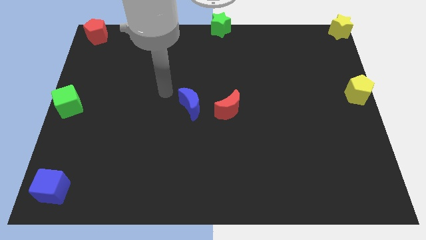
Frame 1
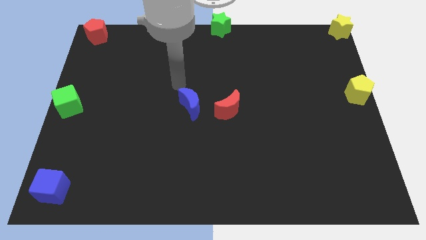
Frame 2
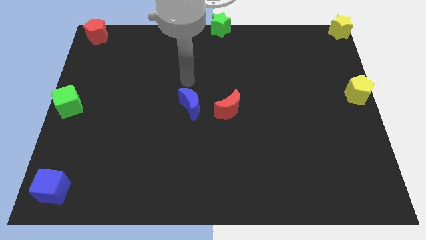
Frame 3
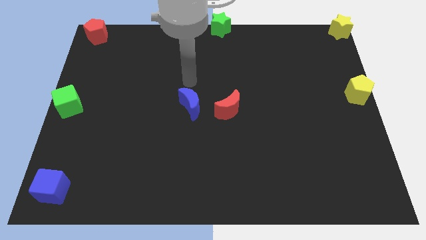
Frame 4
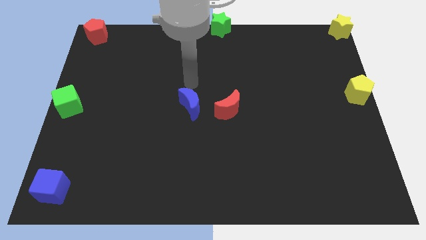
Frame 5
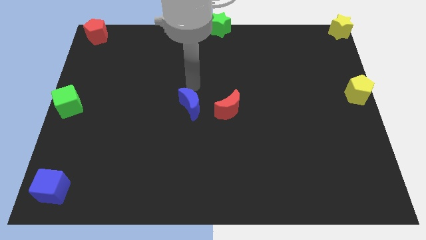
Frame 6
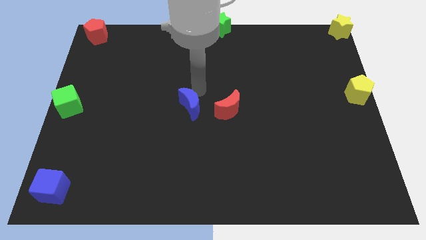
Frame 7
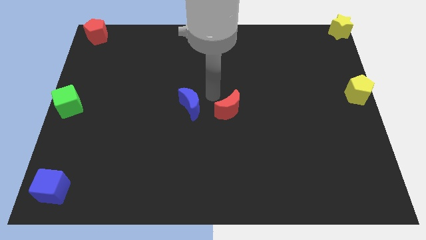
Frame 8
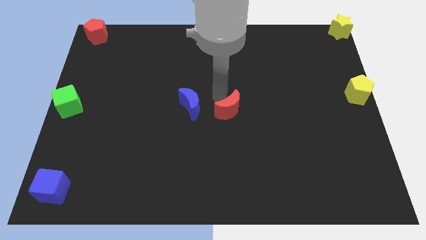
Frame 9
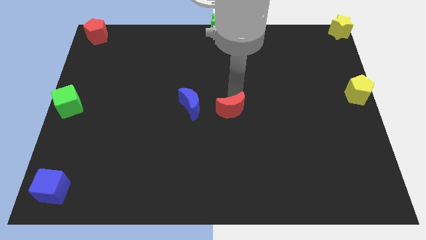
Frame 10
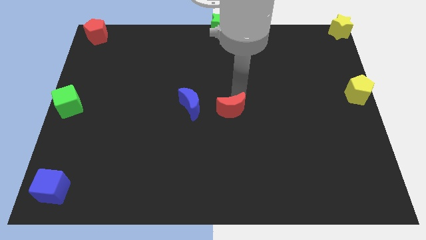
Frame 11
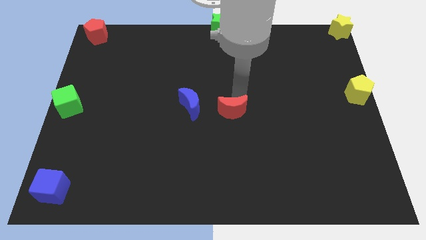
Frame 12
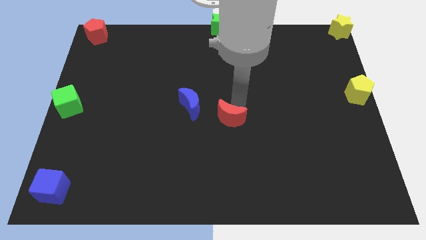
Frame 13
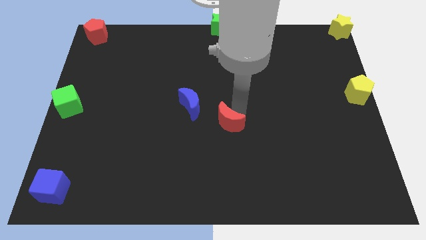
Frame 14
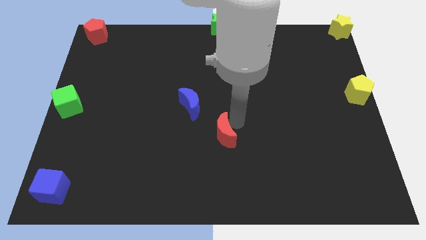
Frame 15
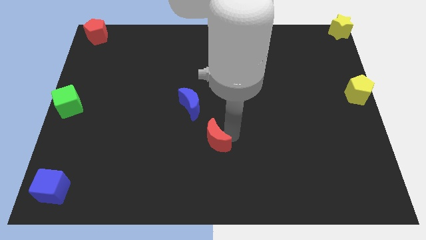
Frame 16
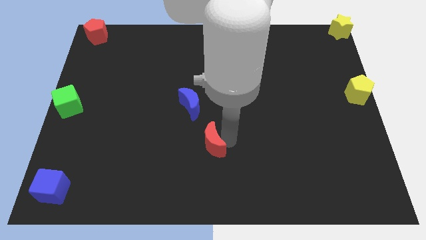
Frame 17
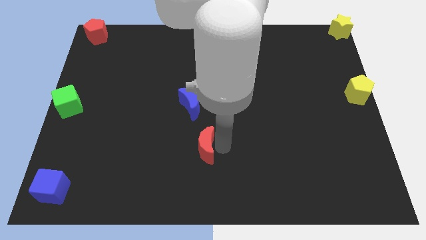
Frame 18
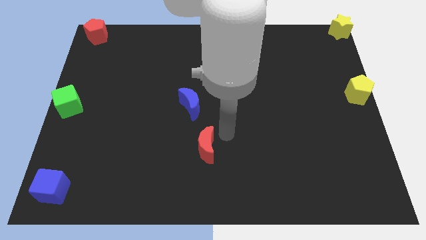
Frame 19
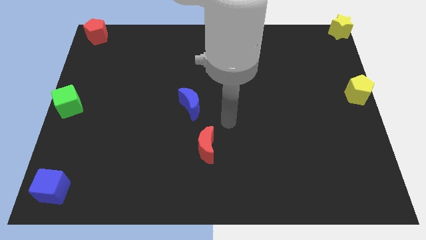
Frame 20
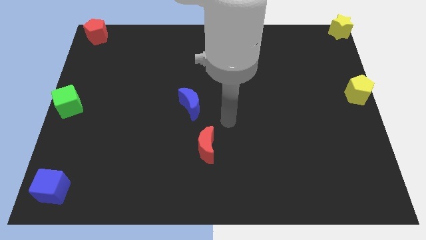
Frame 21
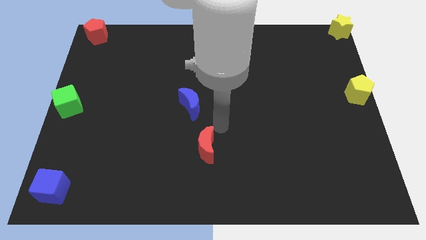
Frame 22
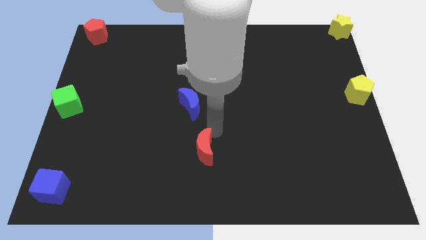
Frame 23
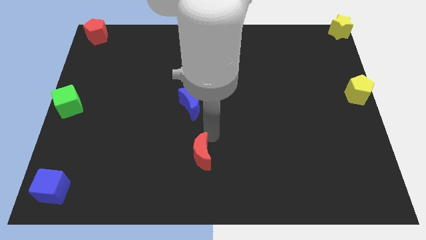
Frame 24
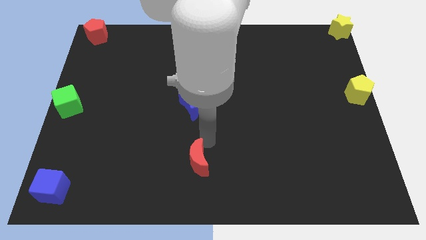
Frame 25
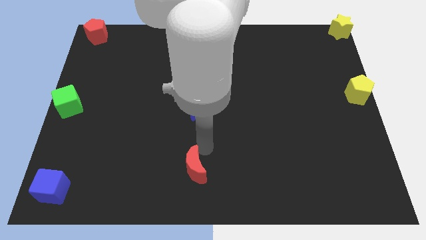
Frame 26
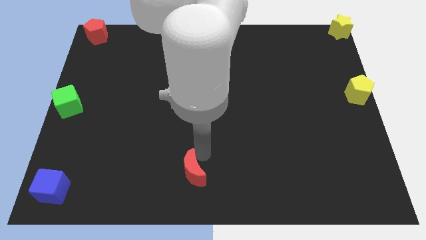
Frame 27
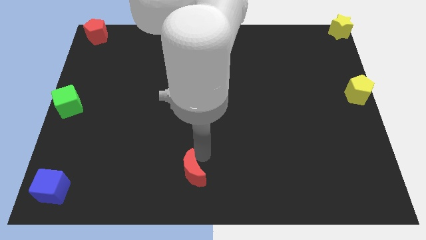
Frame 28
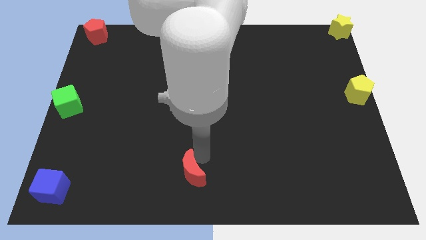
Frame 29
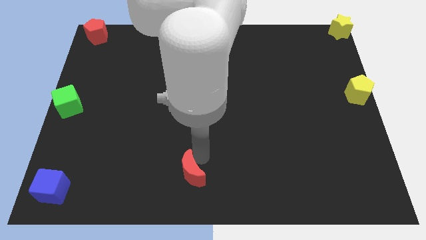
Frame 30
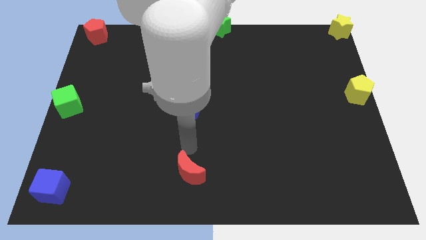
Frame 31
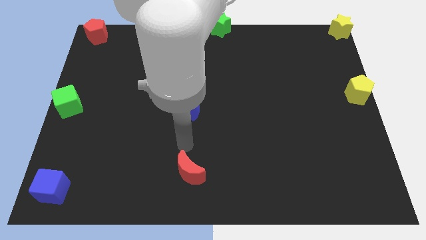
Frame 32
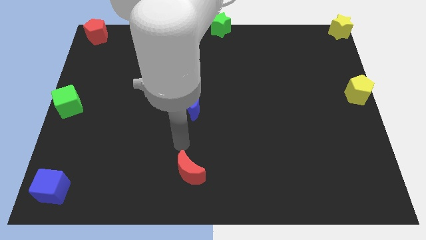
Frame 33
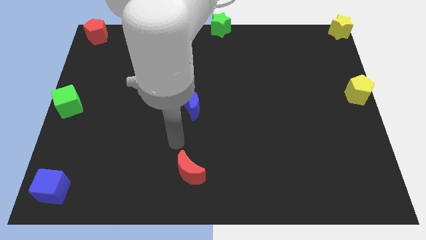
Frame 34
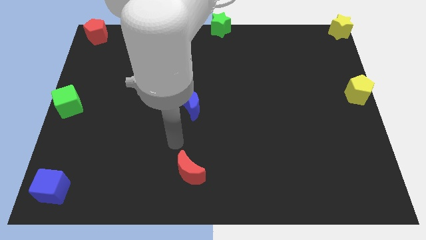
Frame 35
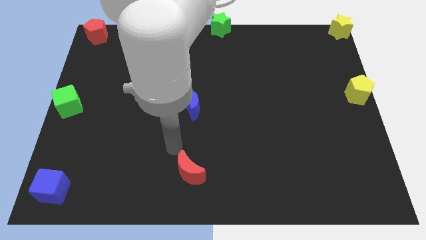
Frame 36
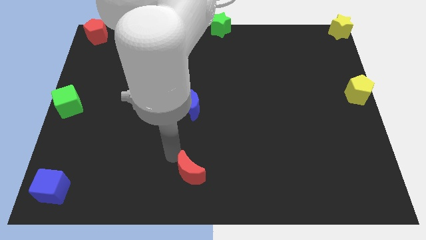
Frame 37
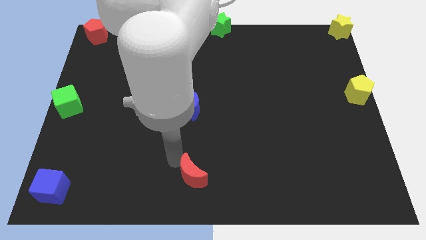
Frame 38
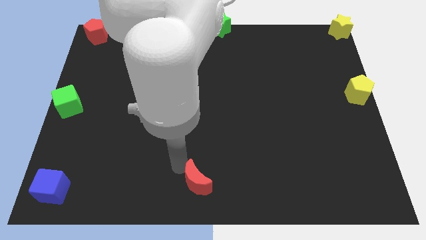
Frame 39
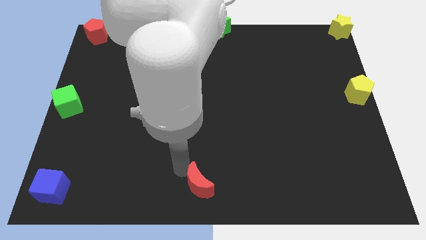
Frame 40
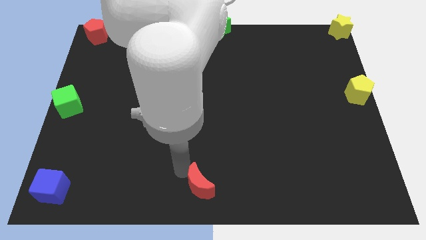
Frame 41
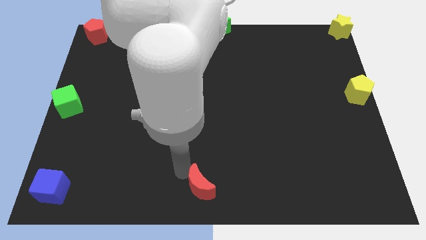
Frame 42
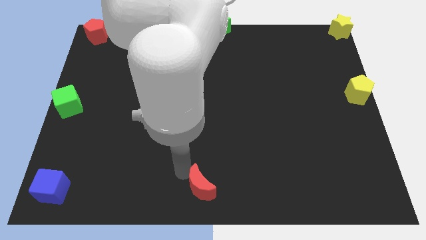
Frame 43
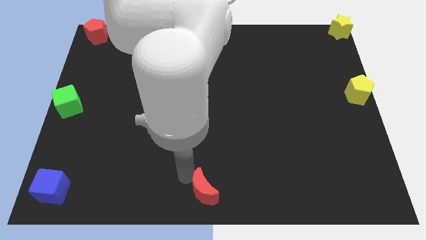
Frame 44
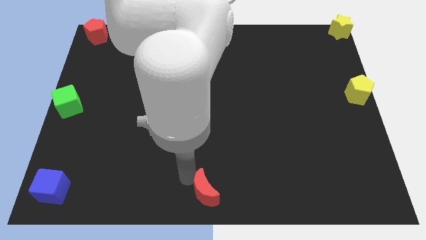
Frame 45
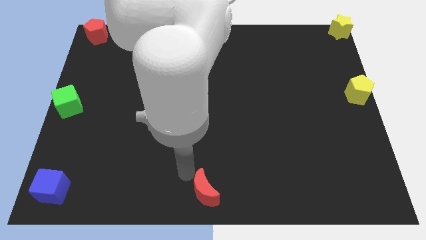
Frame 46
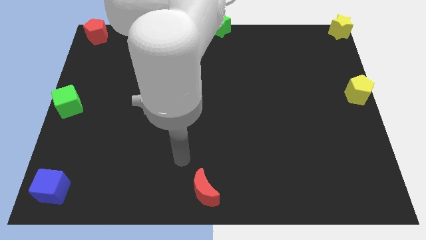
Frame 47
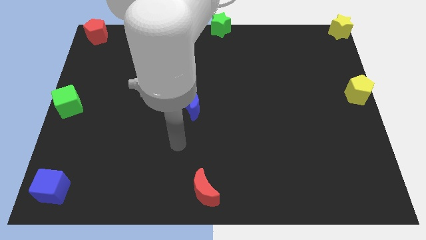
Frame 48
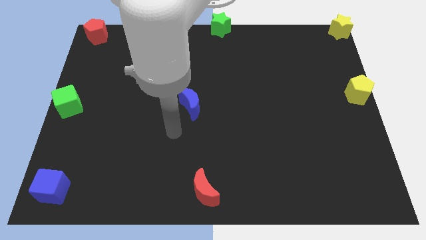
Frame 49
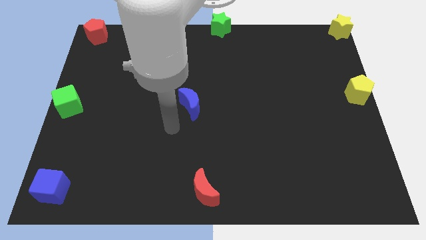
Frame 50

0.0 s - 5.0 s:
push the red moon to the bottom center

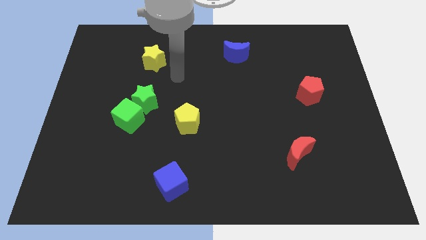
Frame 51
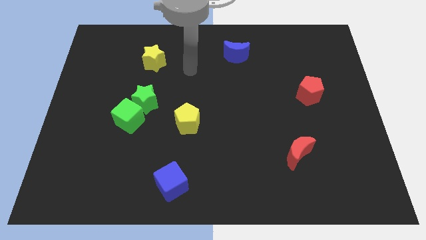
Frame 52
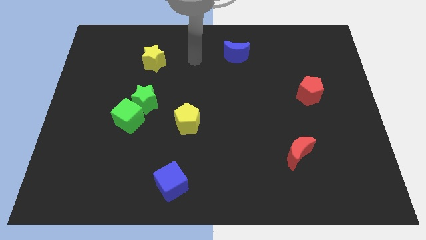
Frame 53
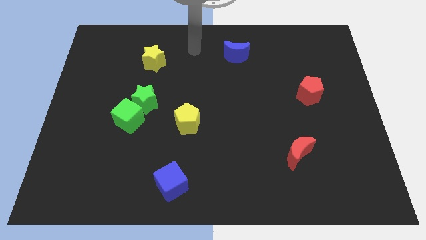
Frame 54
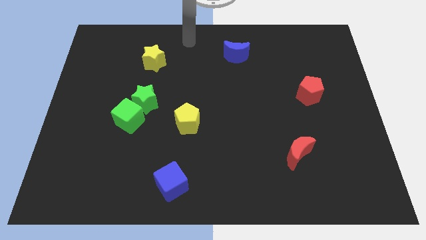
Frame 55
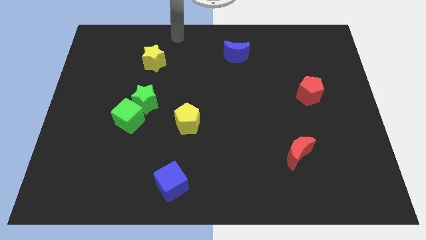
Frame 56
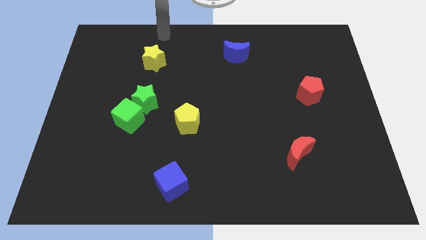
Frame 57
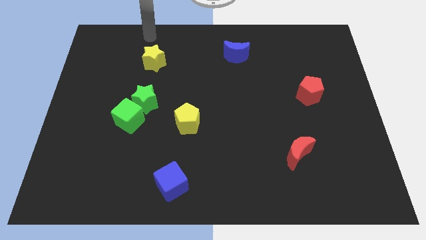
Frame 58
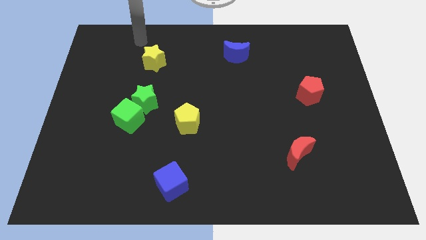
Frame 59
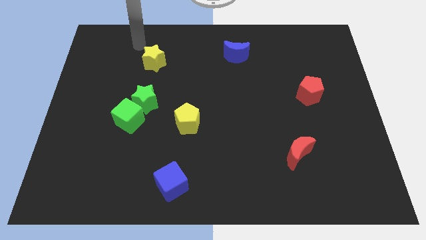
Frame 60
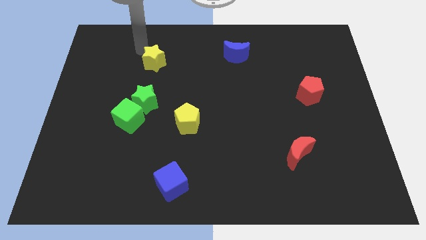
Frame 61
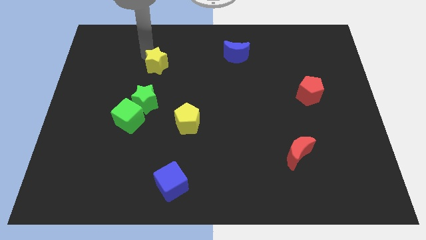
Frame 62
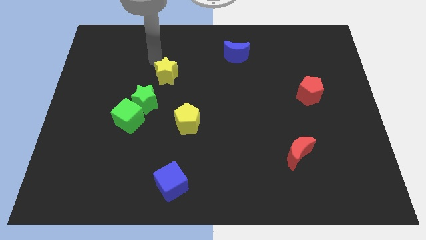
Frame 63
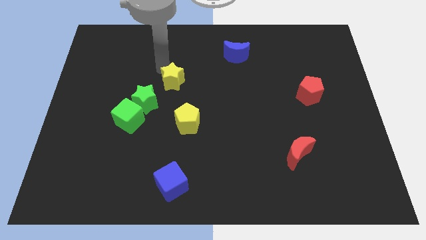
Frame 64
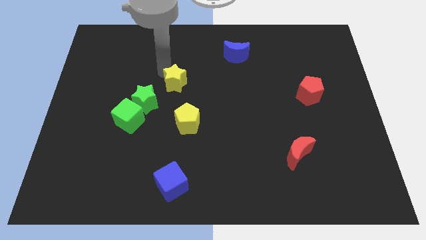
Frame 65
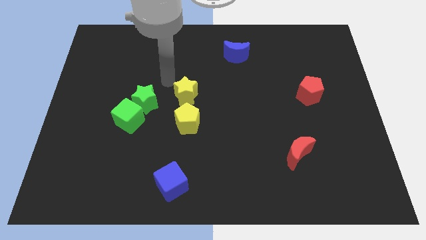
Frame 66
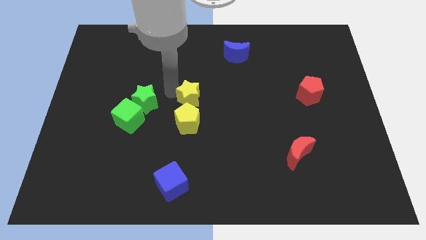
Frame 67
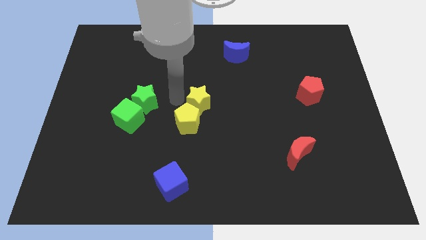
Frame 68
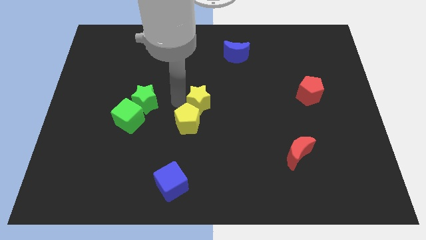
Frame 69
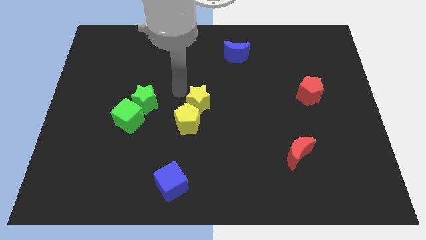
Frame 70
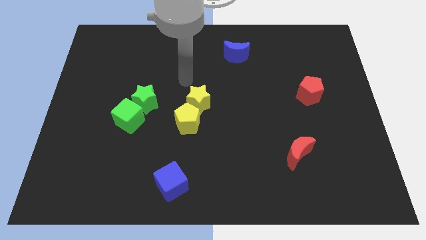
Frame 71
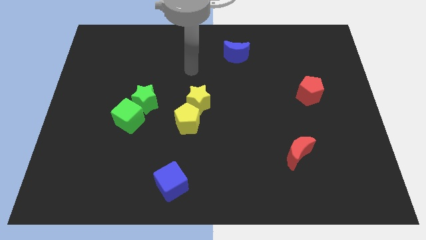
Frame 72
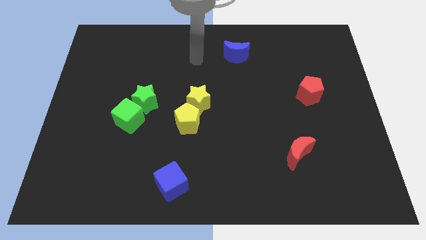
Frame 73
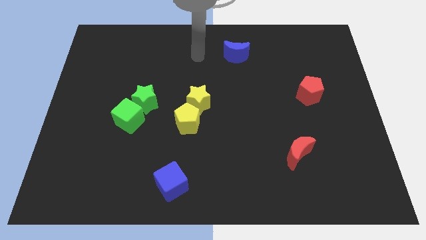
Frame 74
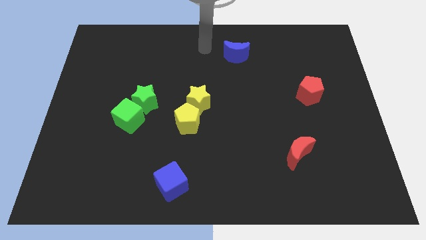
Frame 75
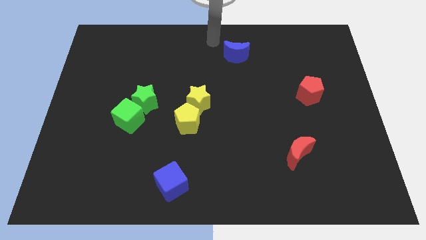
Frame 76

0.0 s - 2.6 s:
push yellow star into yellow pentagon

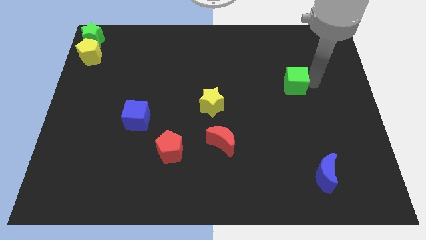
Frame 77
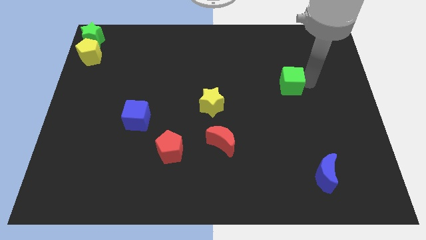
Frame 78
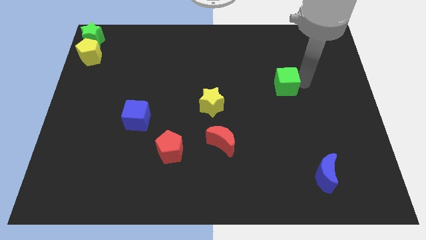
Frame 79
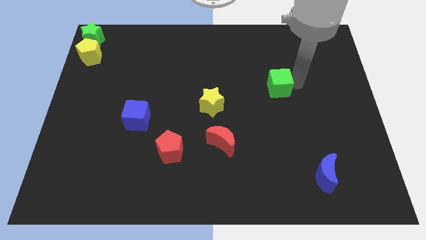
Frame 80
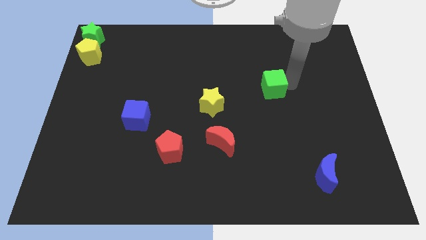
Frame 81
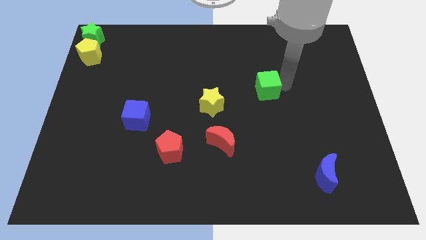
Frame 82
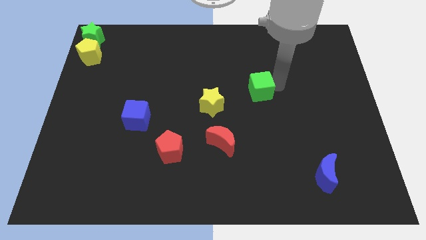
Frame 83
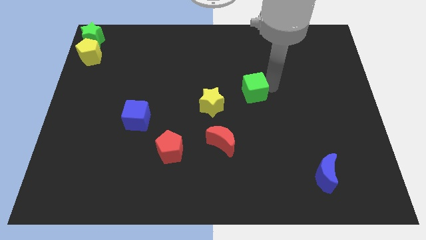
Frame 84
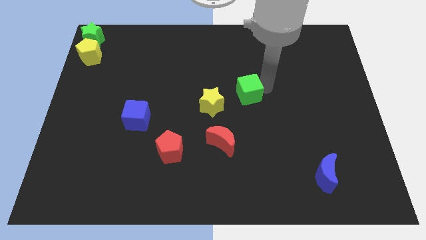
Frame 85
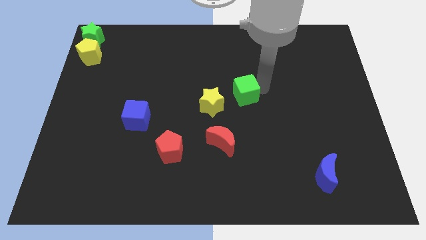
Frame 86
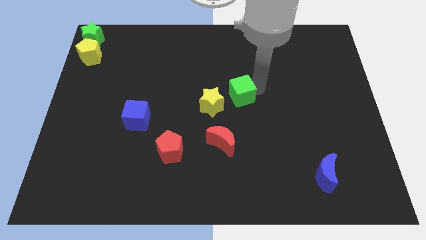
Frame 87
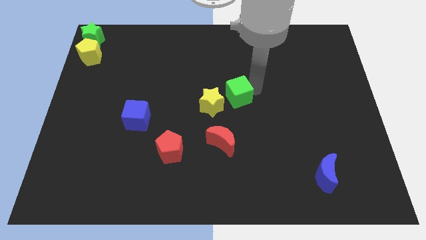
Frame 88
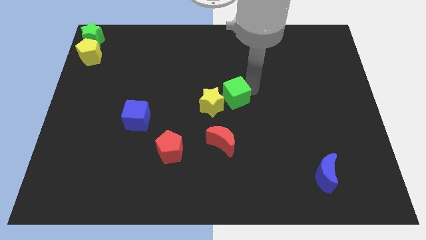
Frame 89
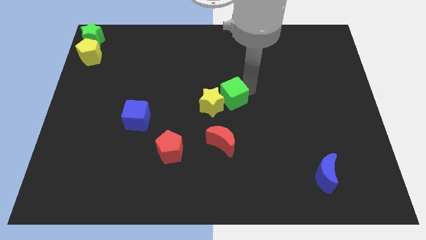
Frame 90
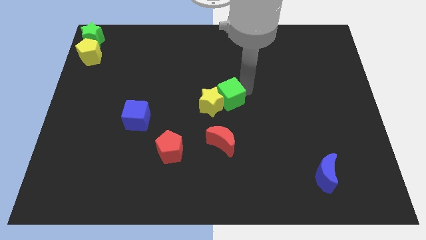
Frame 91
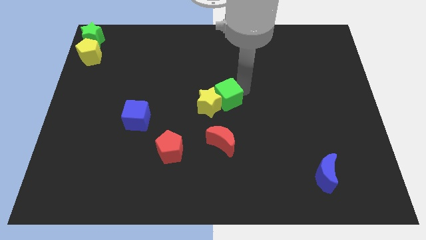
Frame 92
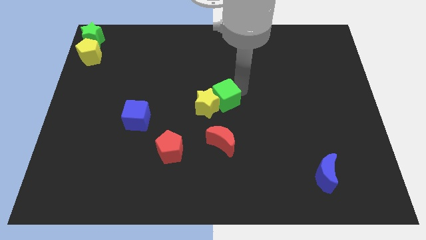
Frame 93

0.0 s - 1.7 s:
place the green cube into yellow star
